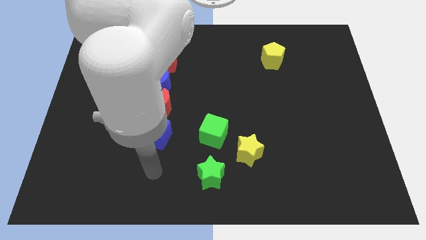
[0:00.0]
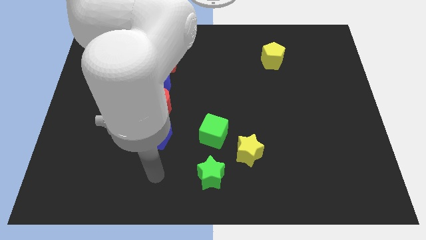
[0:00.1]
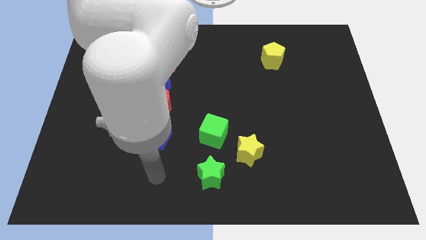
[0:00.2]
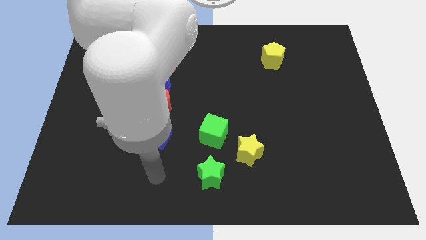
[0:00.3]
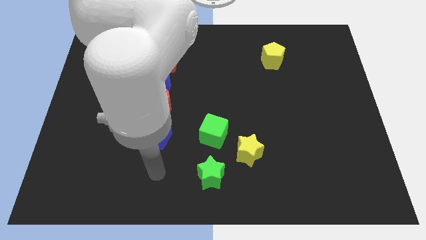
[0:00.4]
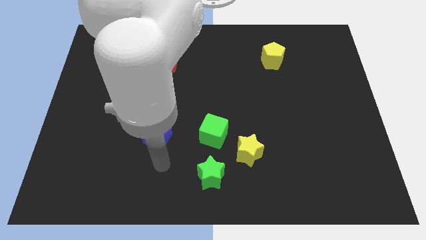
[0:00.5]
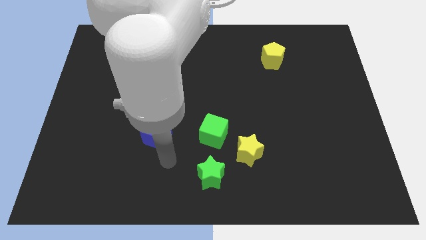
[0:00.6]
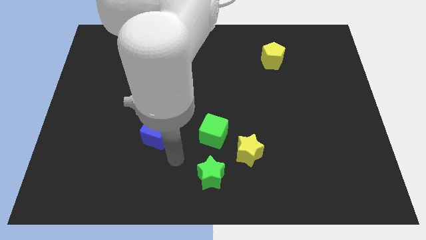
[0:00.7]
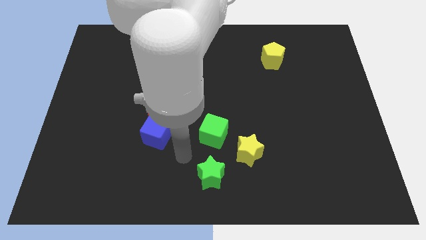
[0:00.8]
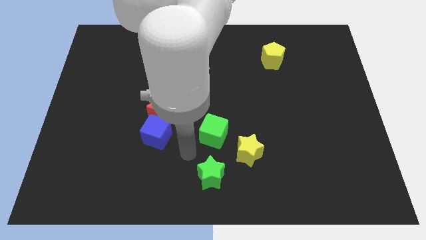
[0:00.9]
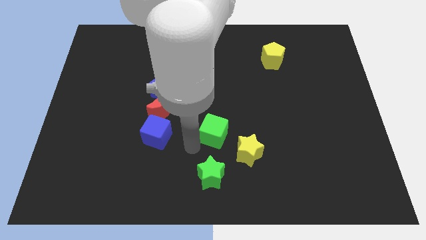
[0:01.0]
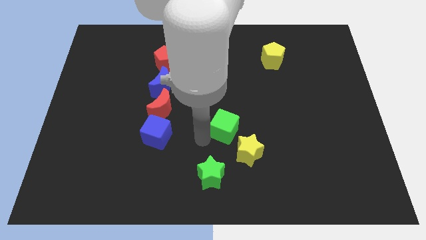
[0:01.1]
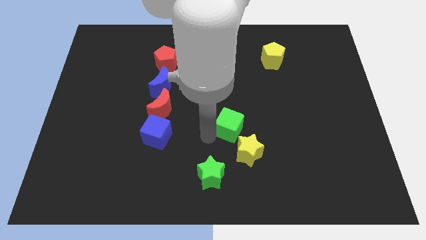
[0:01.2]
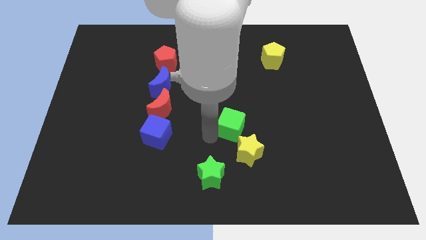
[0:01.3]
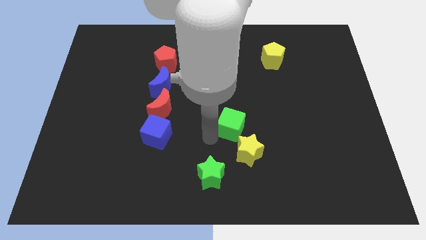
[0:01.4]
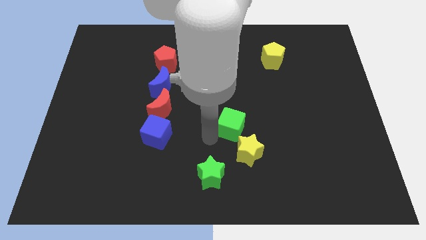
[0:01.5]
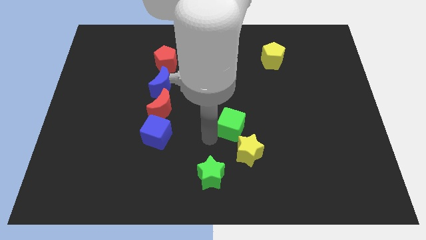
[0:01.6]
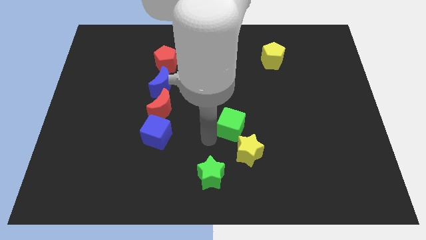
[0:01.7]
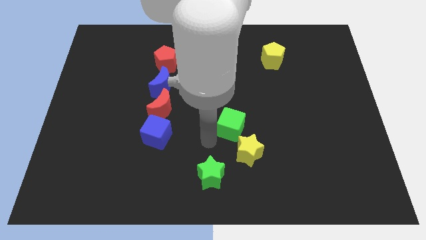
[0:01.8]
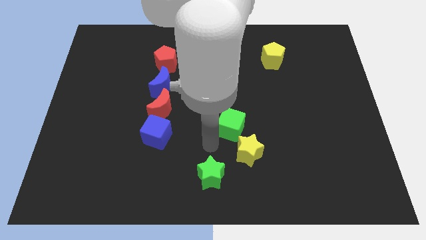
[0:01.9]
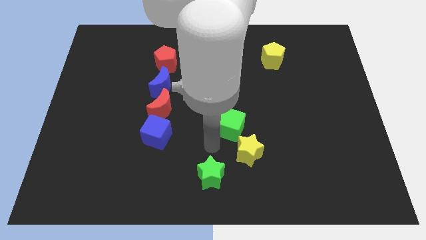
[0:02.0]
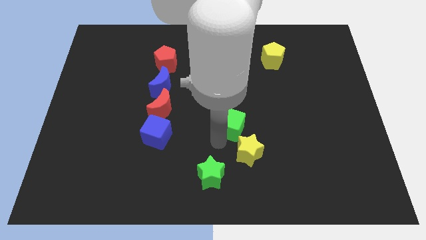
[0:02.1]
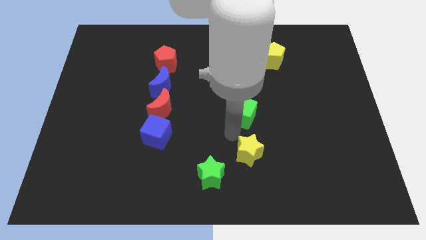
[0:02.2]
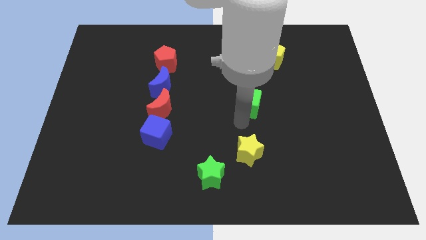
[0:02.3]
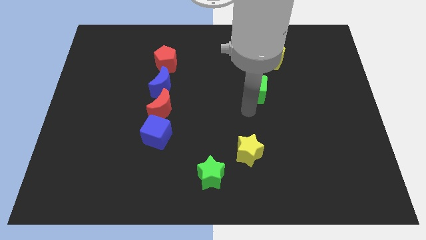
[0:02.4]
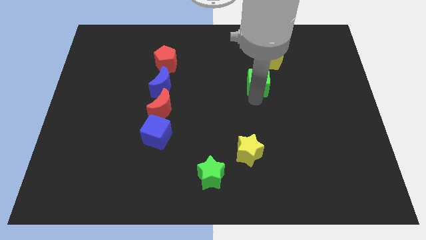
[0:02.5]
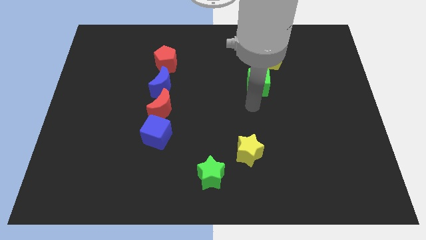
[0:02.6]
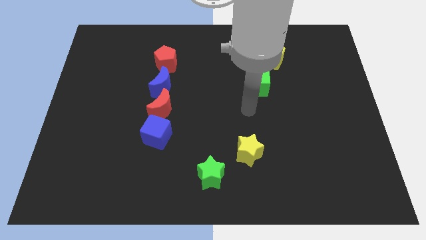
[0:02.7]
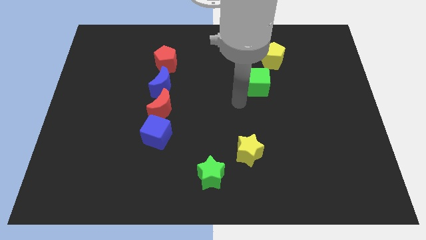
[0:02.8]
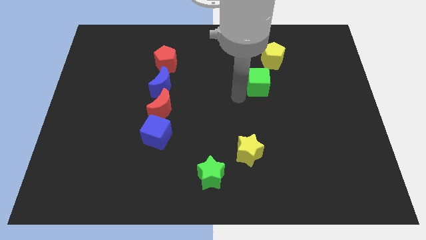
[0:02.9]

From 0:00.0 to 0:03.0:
drag the green cube diagonally to blue cube

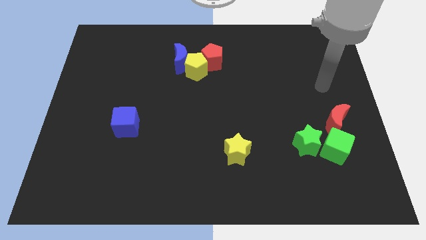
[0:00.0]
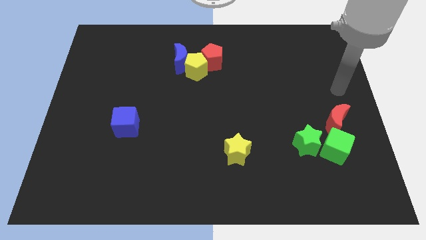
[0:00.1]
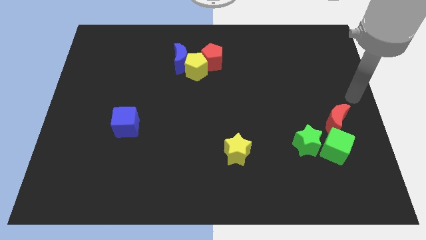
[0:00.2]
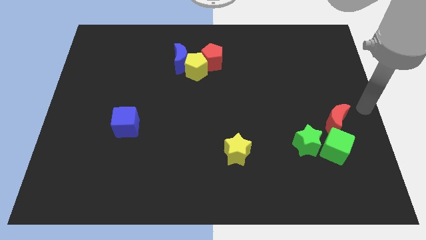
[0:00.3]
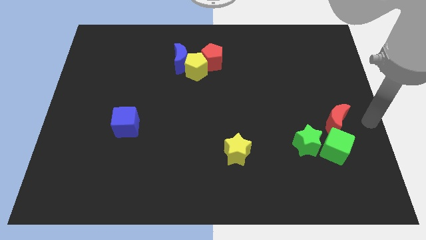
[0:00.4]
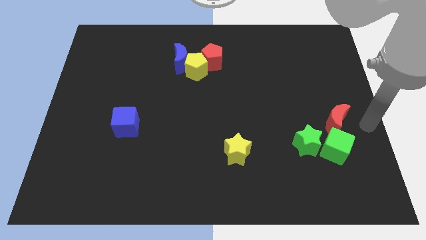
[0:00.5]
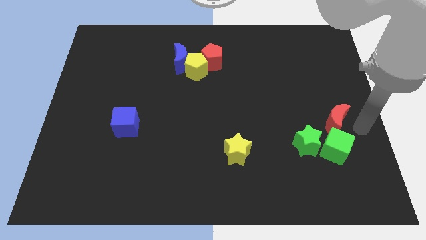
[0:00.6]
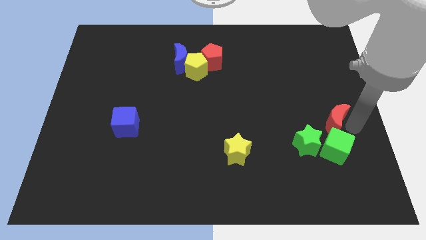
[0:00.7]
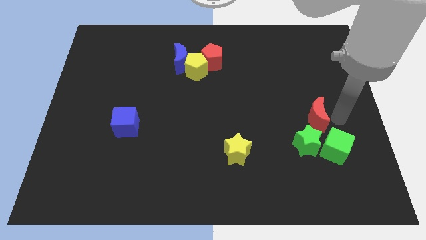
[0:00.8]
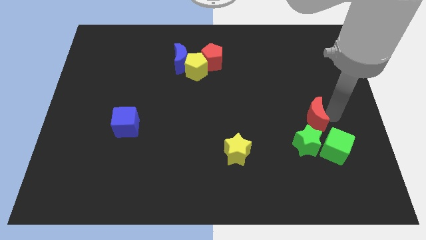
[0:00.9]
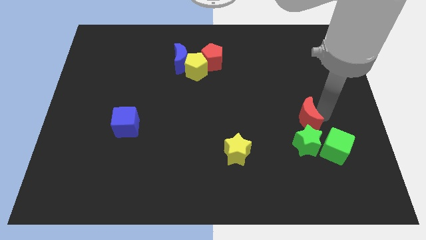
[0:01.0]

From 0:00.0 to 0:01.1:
push the red crescent to the top of the green star

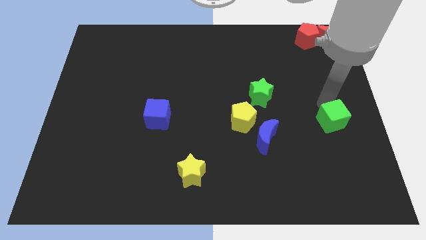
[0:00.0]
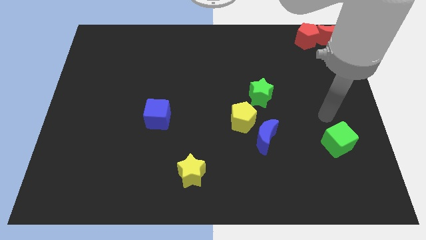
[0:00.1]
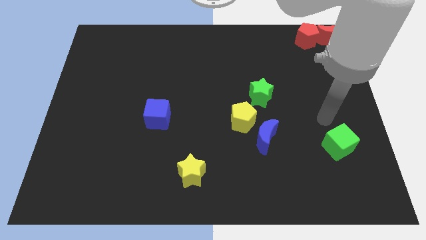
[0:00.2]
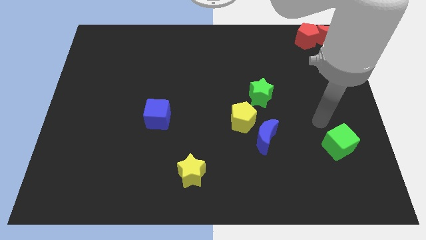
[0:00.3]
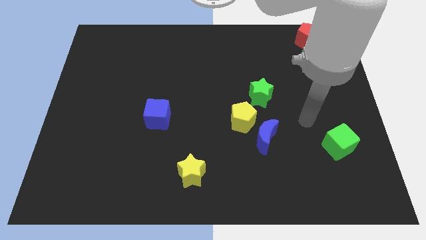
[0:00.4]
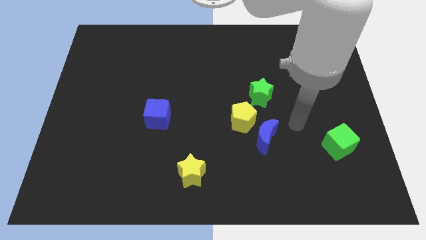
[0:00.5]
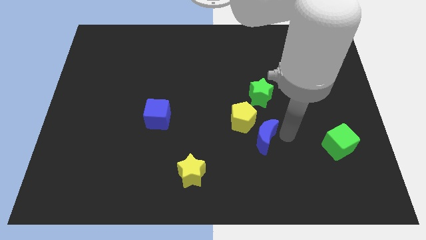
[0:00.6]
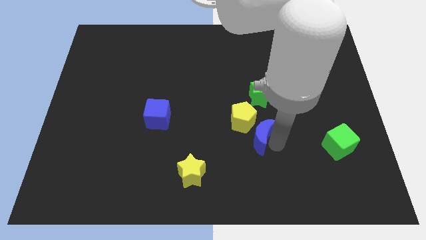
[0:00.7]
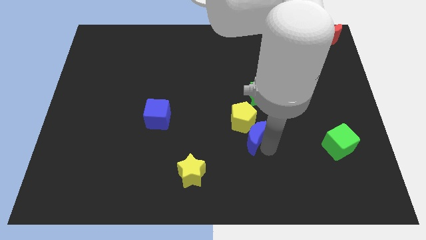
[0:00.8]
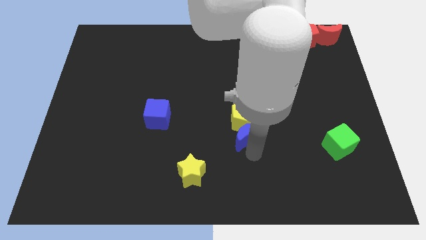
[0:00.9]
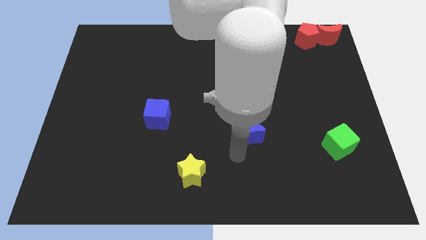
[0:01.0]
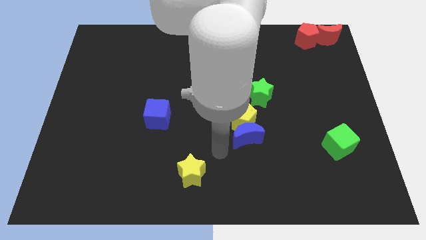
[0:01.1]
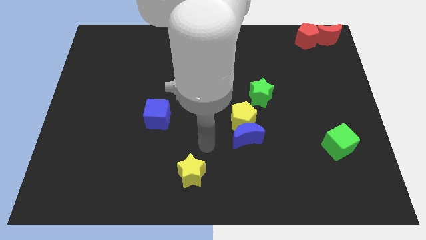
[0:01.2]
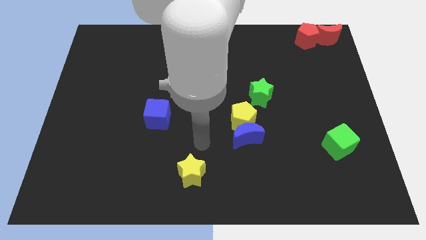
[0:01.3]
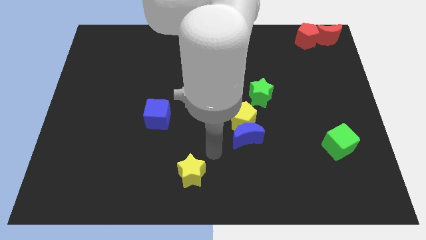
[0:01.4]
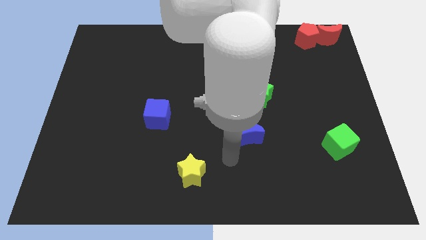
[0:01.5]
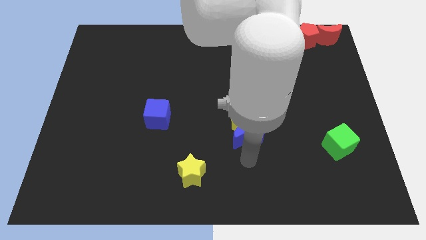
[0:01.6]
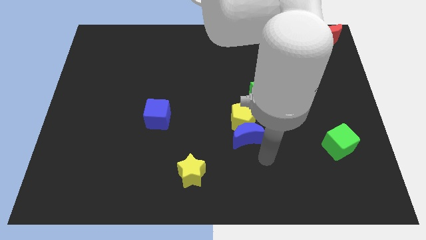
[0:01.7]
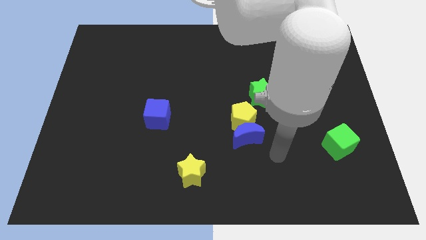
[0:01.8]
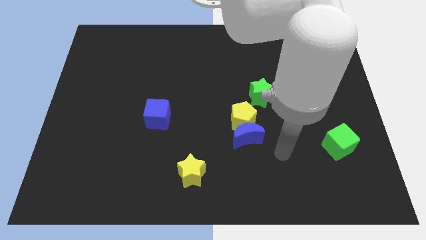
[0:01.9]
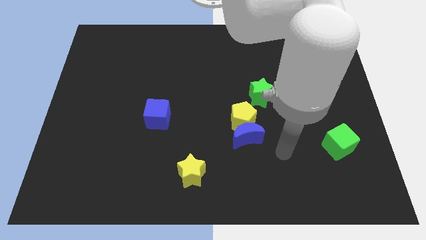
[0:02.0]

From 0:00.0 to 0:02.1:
place the blue moon to the bottom of the yellow pentagon

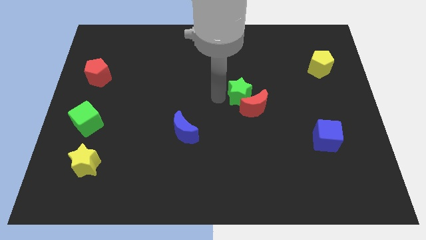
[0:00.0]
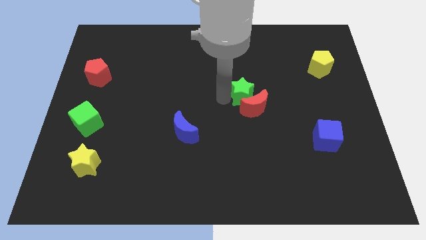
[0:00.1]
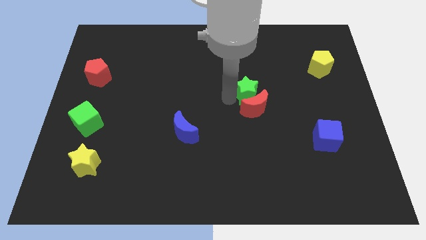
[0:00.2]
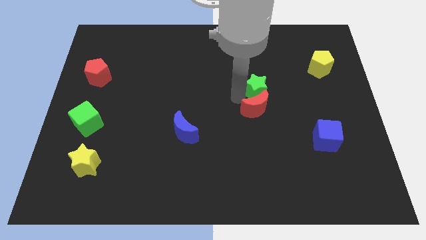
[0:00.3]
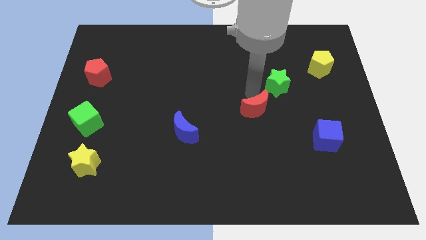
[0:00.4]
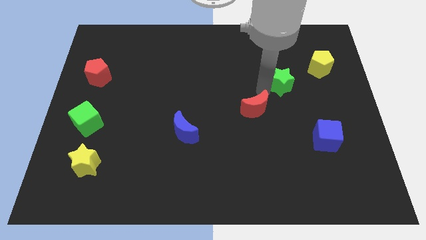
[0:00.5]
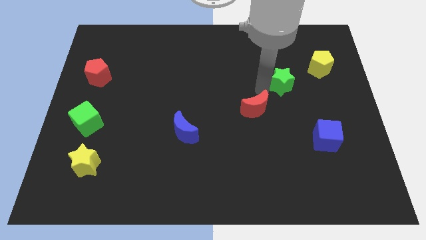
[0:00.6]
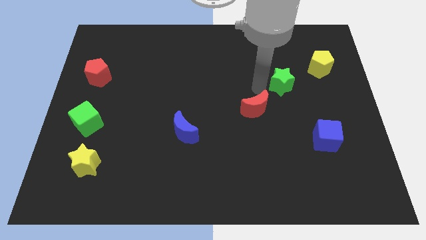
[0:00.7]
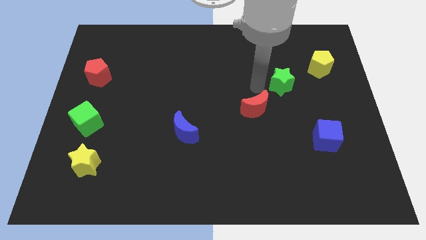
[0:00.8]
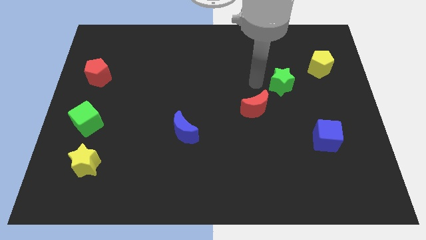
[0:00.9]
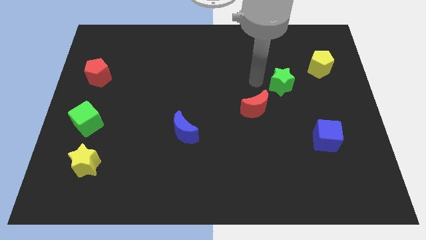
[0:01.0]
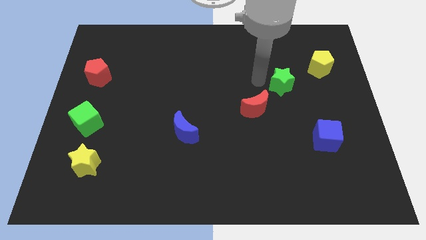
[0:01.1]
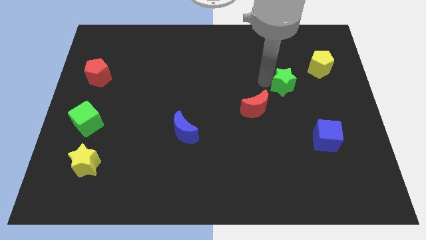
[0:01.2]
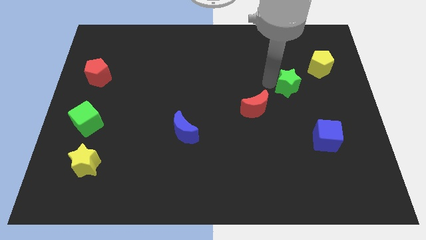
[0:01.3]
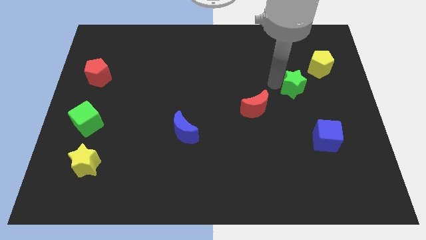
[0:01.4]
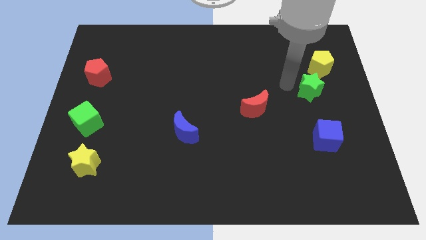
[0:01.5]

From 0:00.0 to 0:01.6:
separate the green star from the red crescent

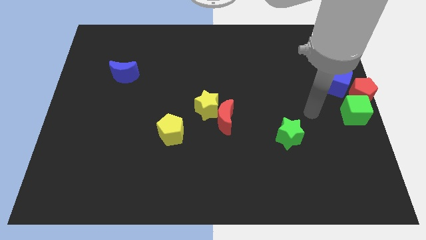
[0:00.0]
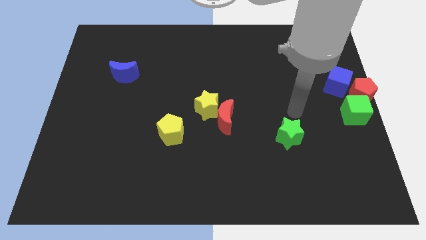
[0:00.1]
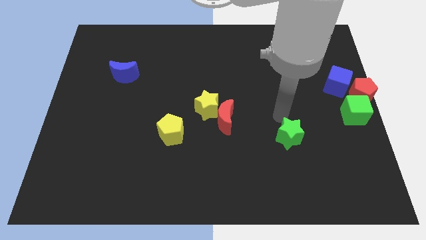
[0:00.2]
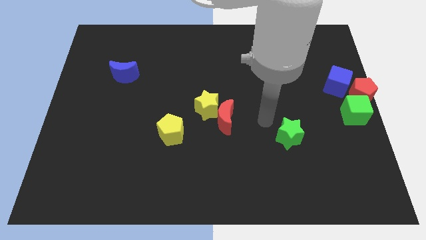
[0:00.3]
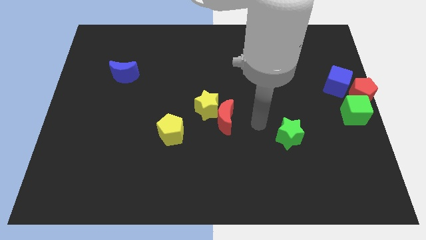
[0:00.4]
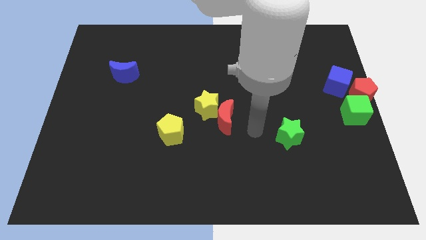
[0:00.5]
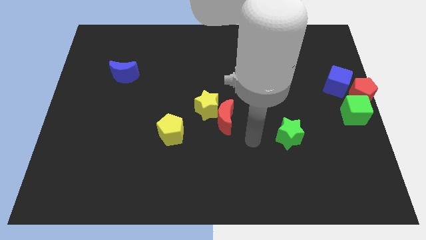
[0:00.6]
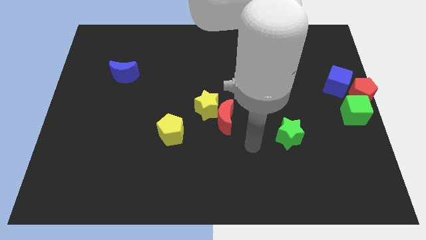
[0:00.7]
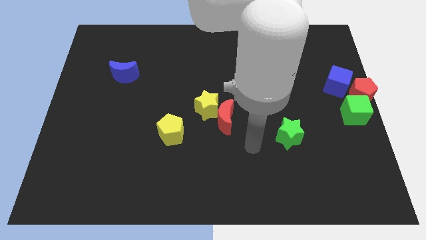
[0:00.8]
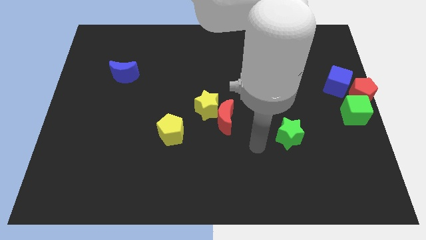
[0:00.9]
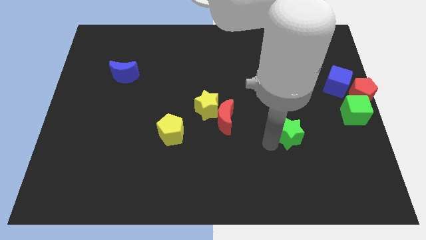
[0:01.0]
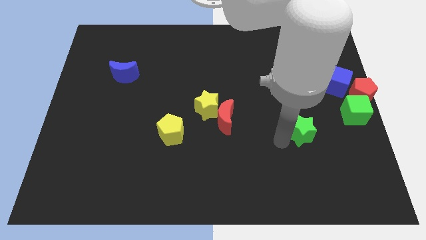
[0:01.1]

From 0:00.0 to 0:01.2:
push green star towards green cube
